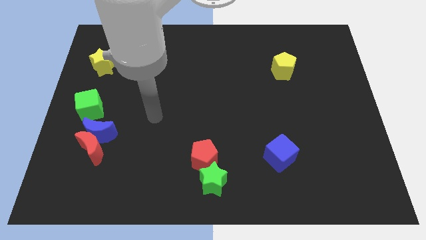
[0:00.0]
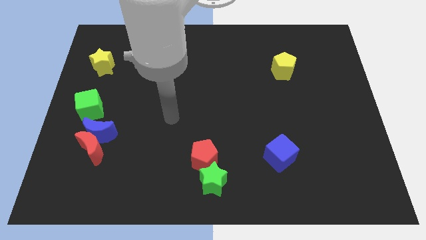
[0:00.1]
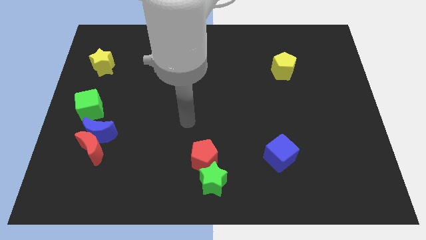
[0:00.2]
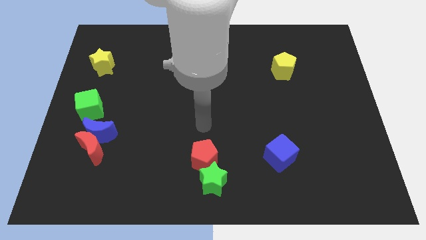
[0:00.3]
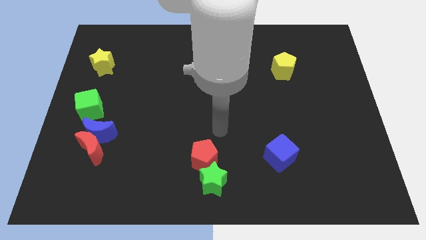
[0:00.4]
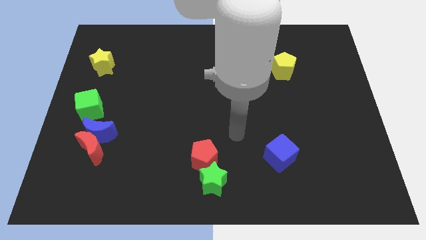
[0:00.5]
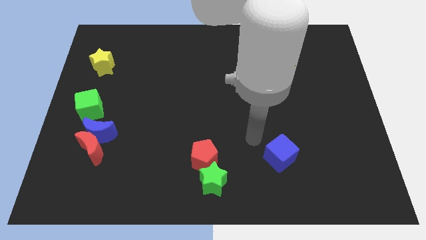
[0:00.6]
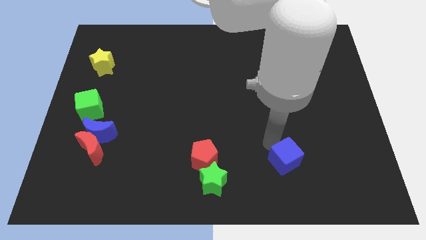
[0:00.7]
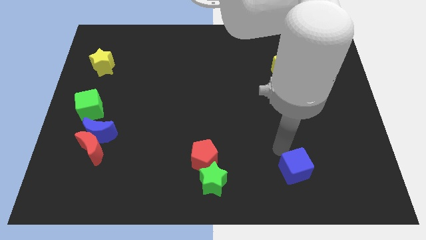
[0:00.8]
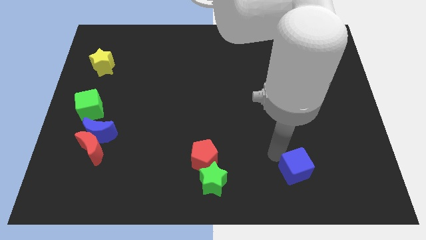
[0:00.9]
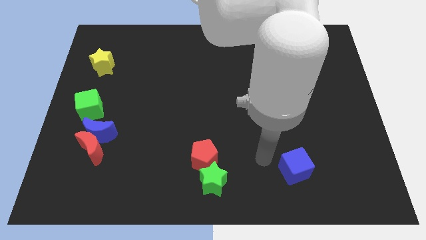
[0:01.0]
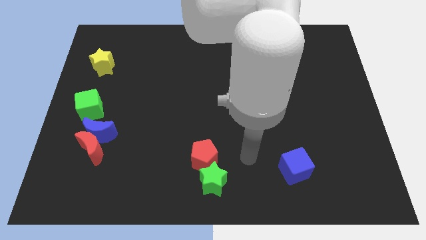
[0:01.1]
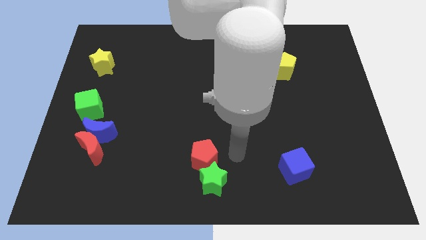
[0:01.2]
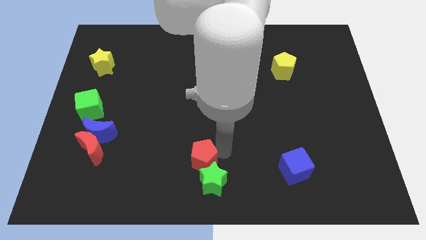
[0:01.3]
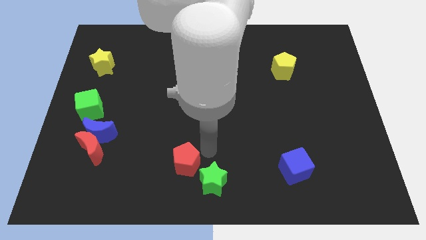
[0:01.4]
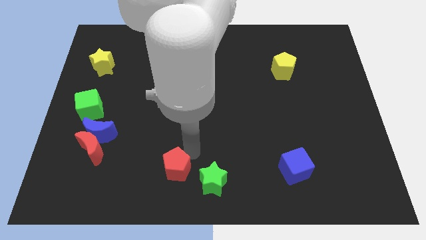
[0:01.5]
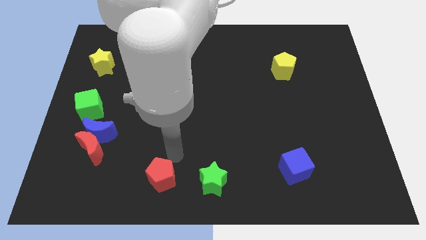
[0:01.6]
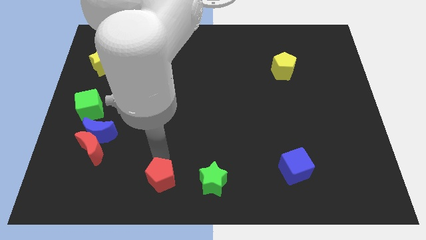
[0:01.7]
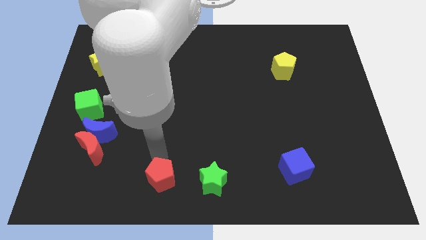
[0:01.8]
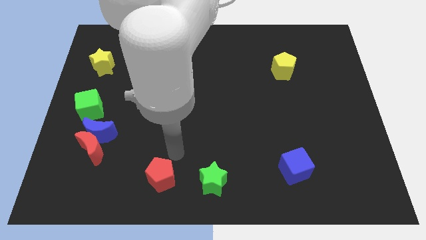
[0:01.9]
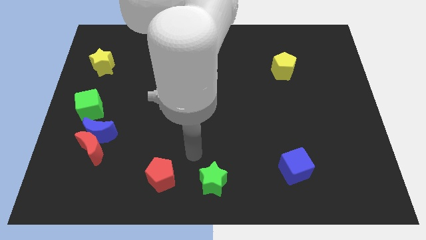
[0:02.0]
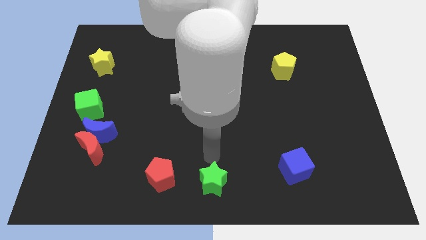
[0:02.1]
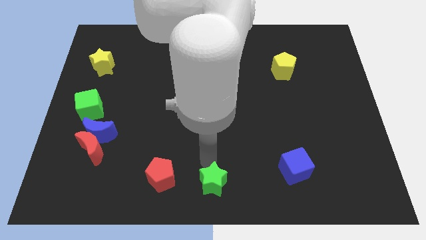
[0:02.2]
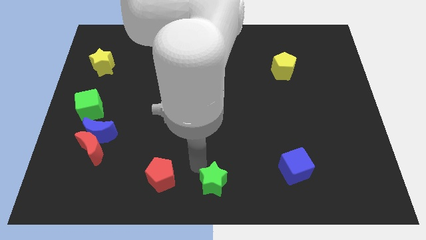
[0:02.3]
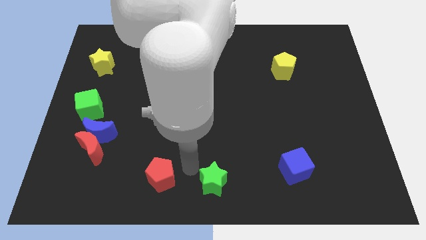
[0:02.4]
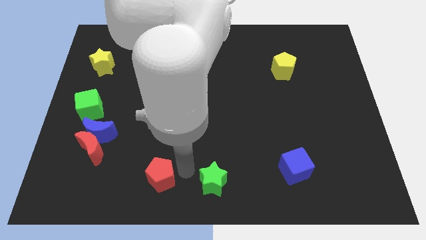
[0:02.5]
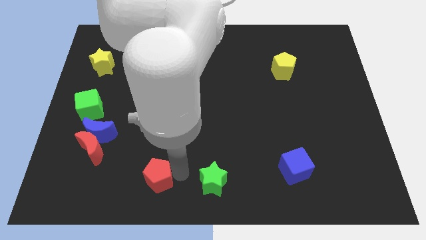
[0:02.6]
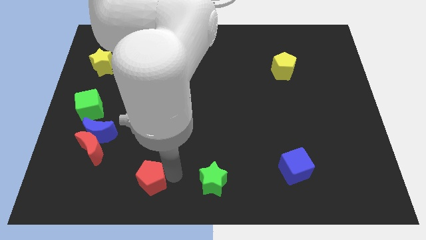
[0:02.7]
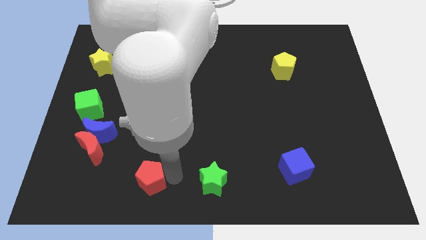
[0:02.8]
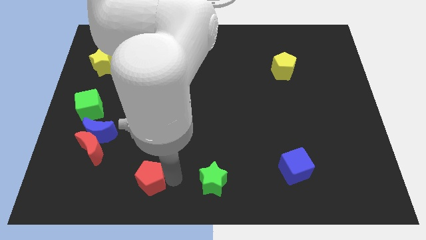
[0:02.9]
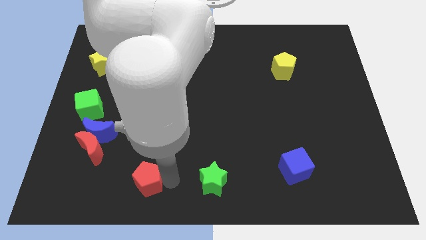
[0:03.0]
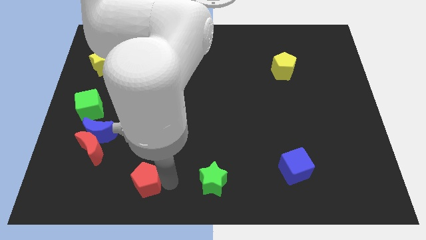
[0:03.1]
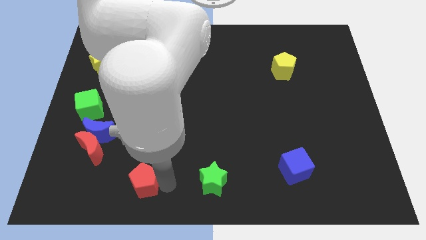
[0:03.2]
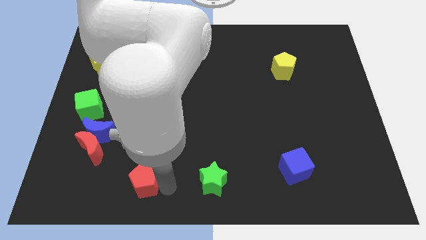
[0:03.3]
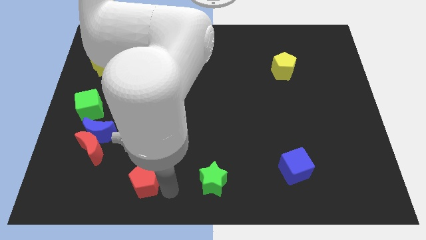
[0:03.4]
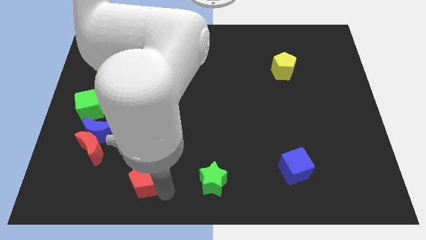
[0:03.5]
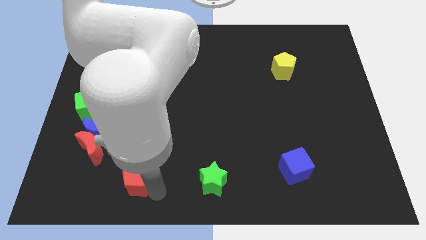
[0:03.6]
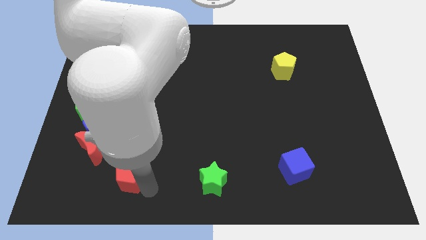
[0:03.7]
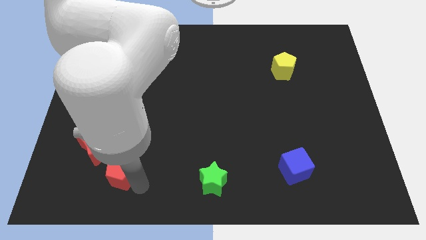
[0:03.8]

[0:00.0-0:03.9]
adjust the blue cube and the red pentagon on either sides of the green star

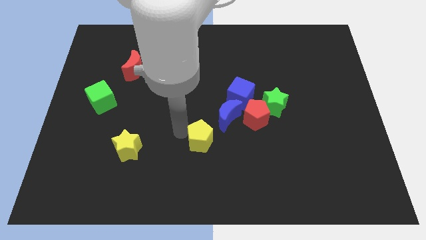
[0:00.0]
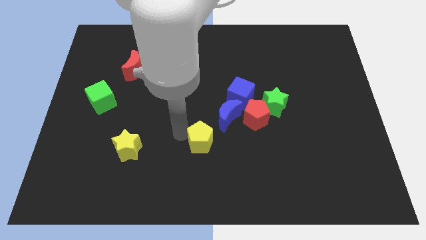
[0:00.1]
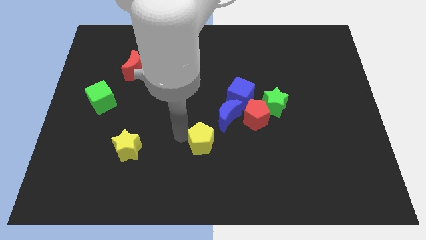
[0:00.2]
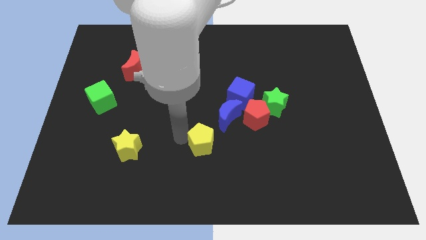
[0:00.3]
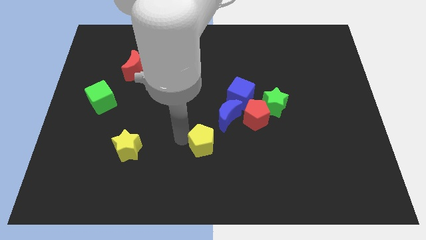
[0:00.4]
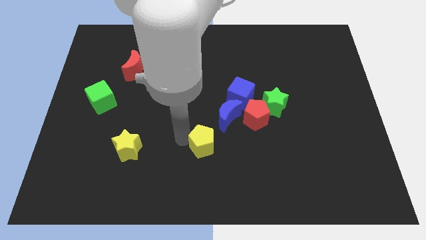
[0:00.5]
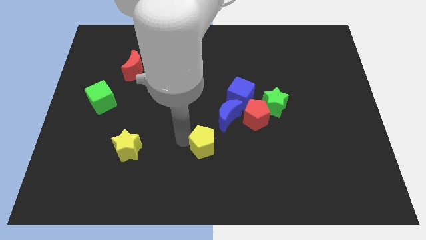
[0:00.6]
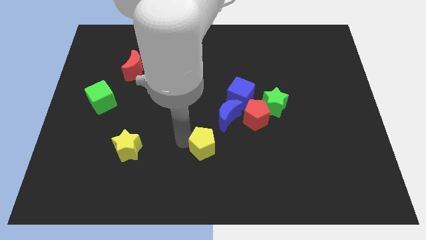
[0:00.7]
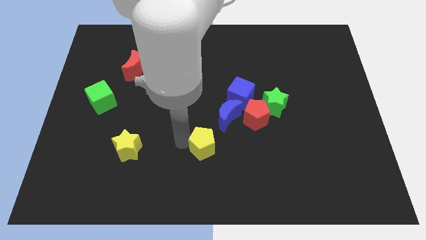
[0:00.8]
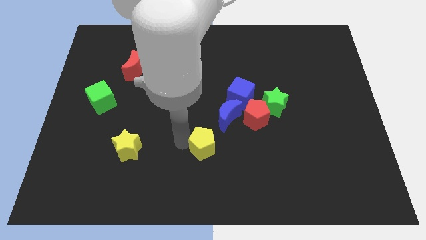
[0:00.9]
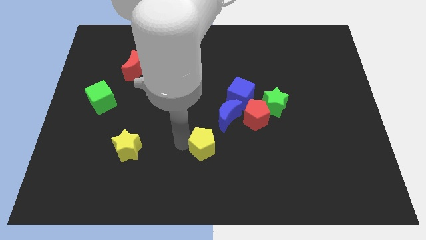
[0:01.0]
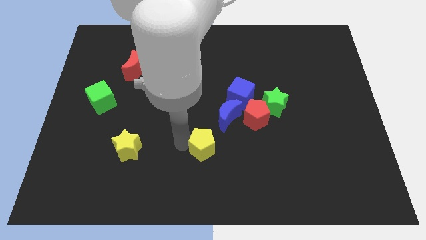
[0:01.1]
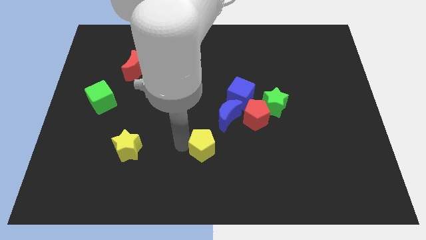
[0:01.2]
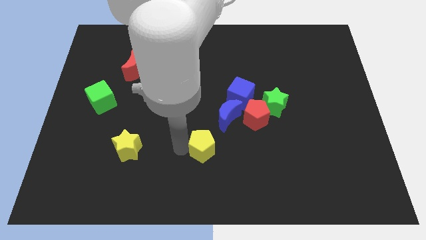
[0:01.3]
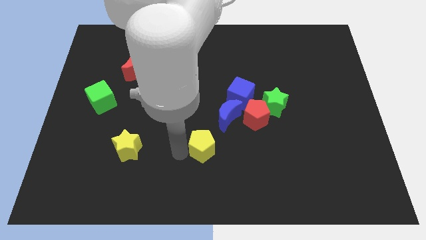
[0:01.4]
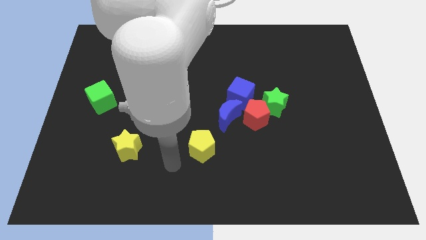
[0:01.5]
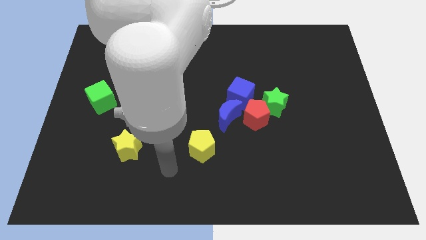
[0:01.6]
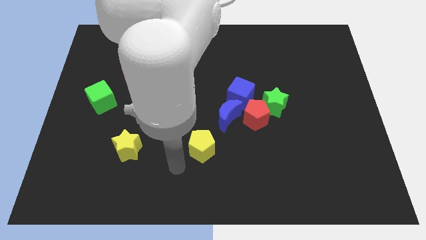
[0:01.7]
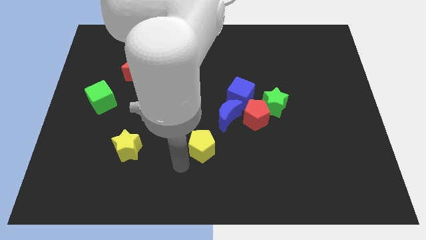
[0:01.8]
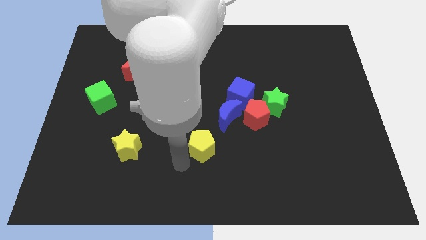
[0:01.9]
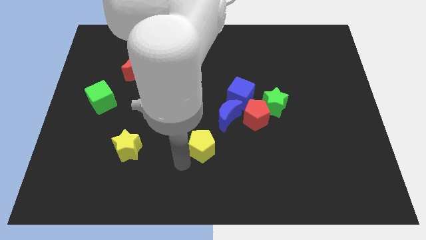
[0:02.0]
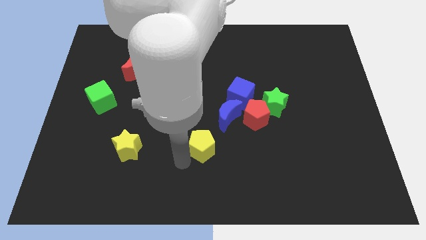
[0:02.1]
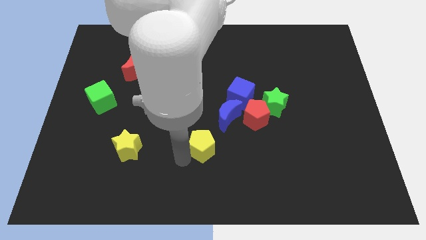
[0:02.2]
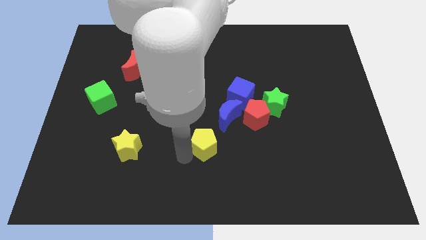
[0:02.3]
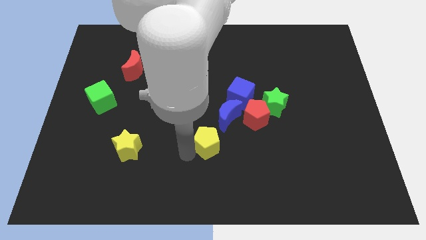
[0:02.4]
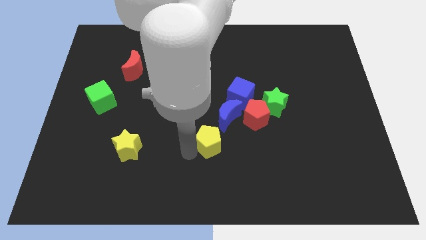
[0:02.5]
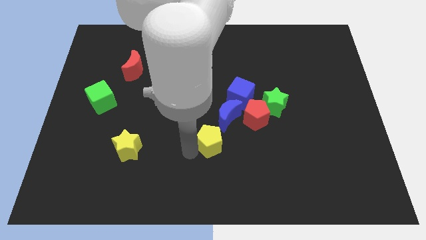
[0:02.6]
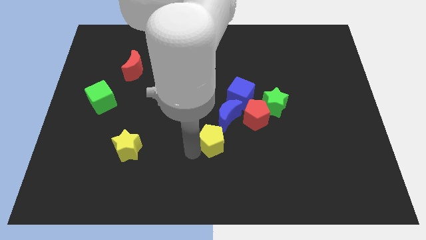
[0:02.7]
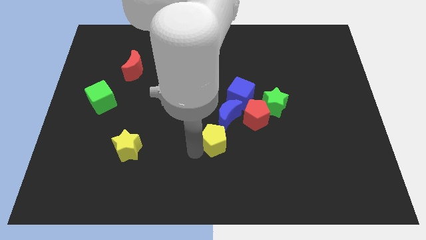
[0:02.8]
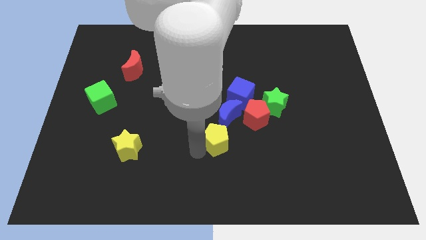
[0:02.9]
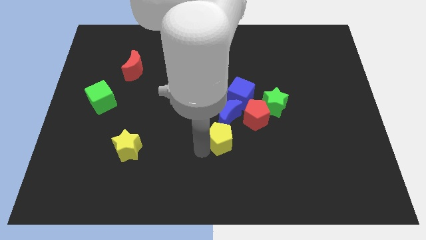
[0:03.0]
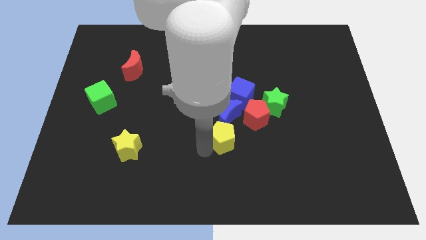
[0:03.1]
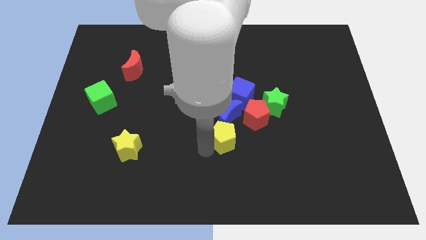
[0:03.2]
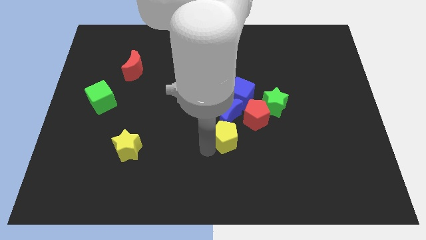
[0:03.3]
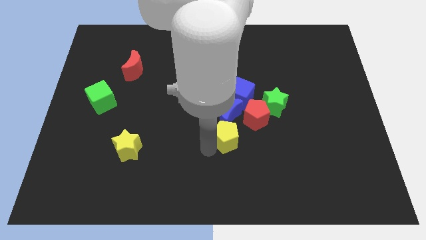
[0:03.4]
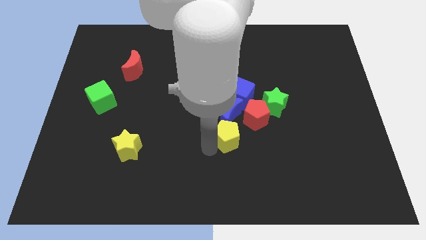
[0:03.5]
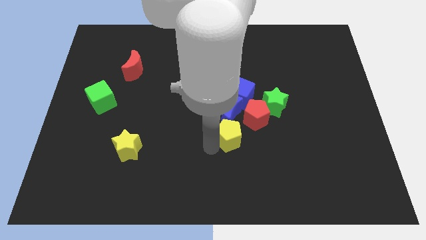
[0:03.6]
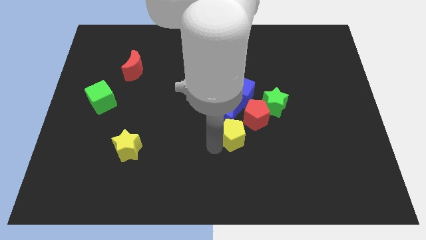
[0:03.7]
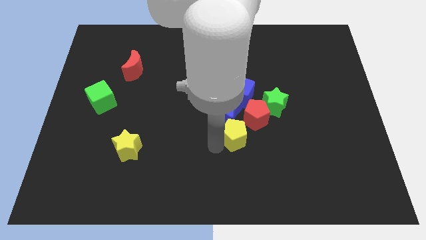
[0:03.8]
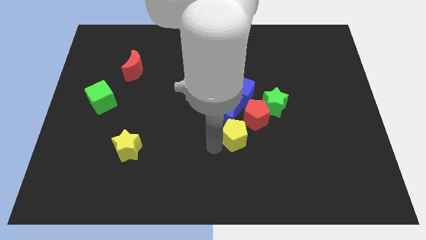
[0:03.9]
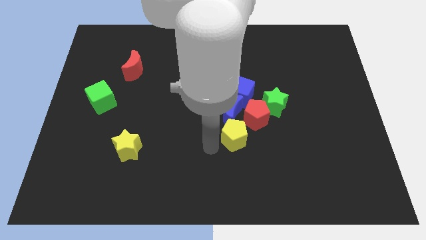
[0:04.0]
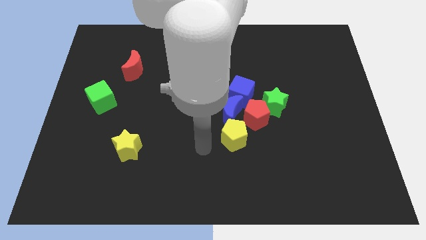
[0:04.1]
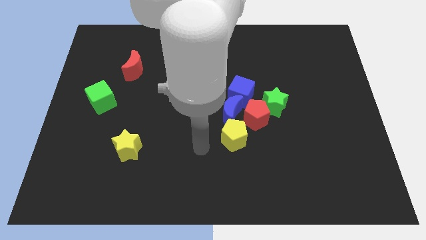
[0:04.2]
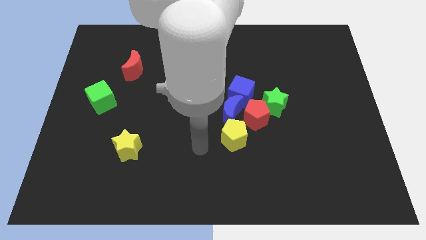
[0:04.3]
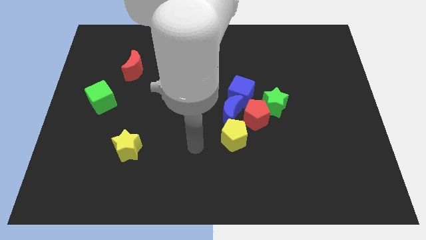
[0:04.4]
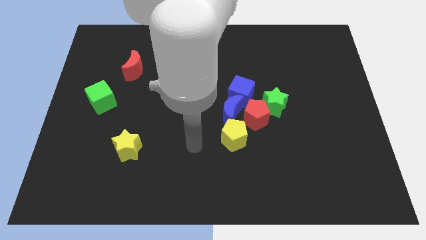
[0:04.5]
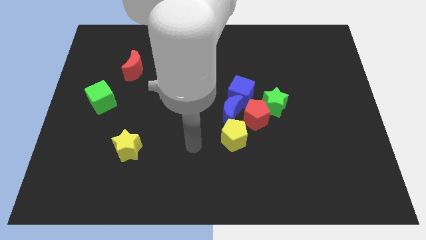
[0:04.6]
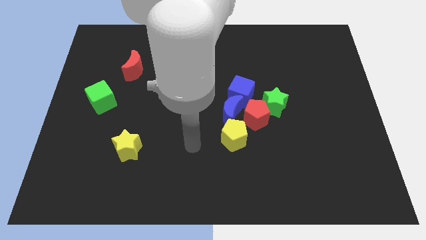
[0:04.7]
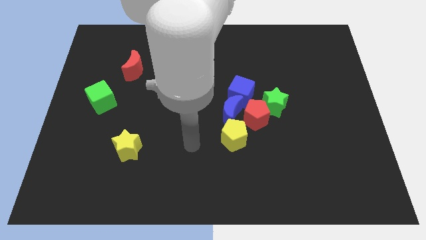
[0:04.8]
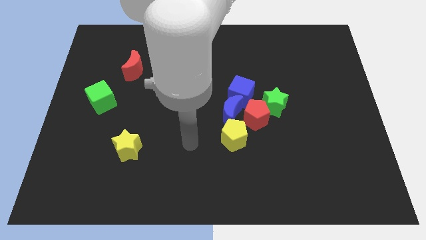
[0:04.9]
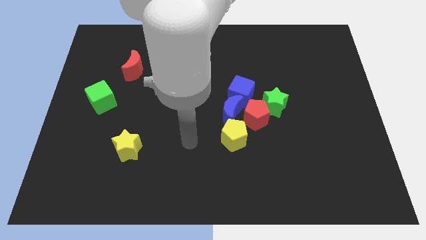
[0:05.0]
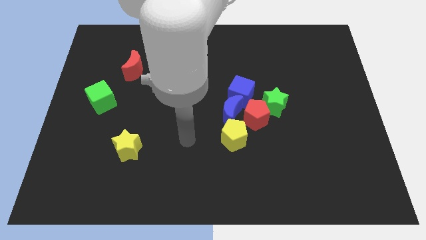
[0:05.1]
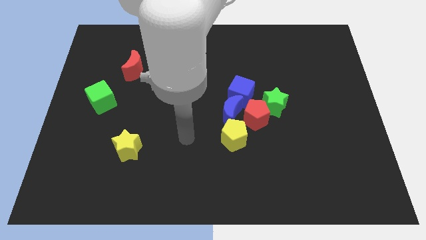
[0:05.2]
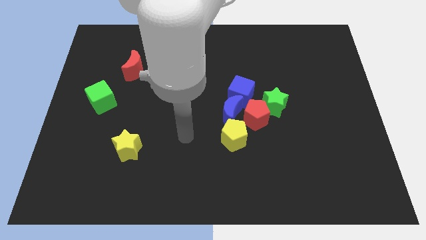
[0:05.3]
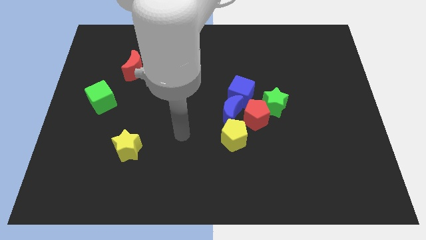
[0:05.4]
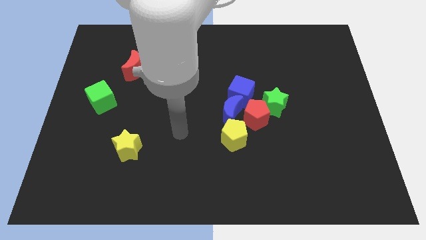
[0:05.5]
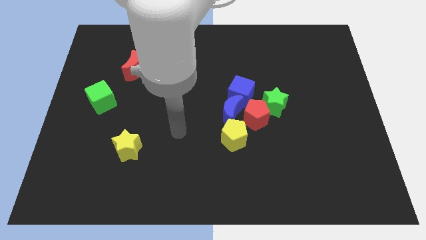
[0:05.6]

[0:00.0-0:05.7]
place yellow pentagon below red pentagon
